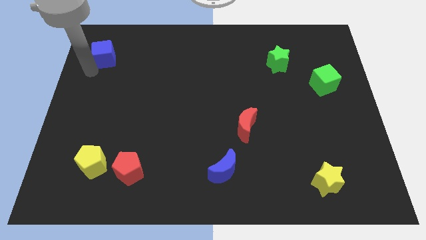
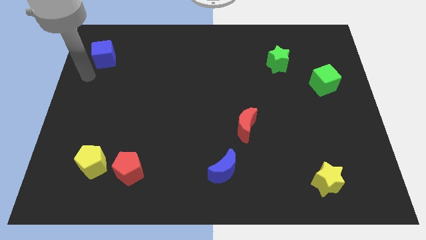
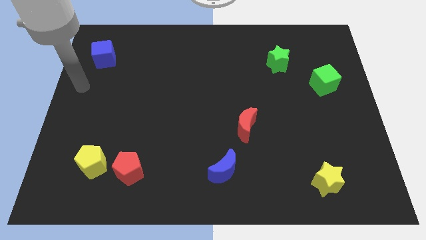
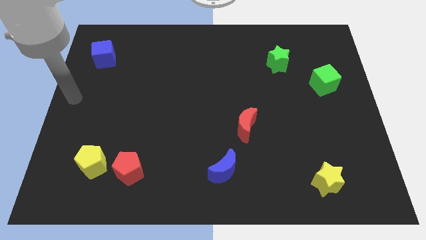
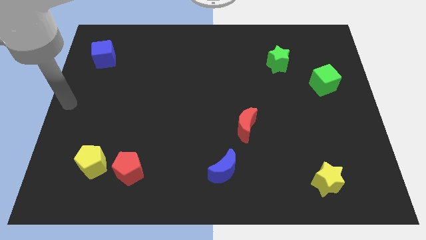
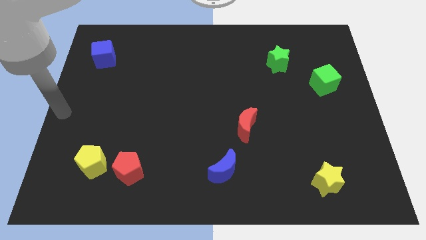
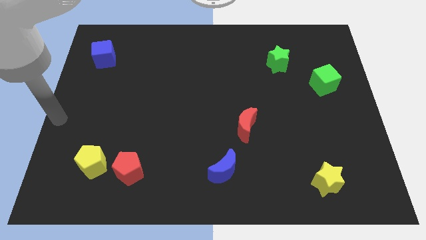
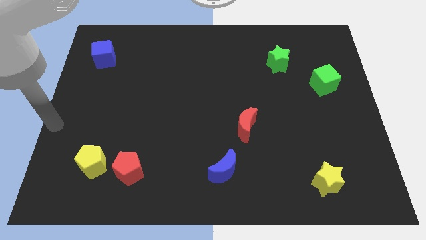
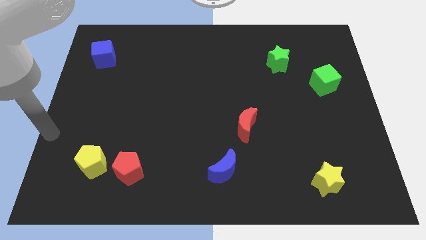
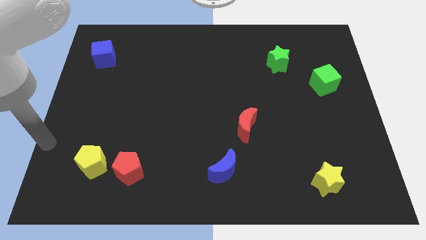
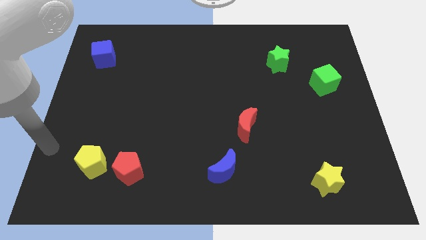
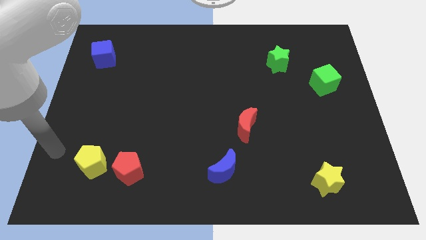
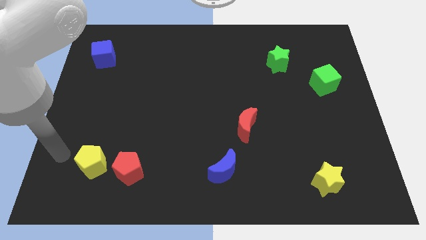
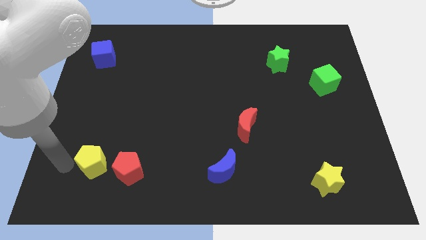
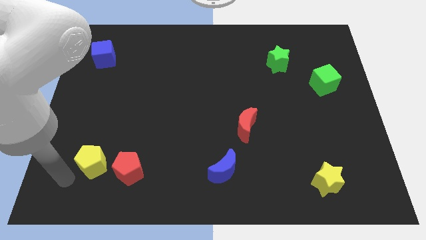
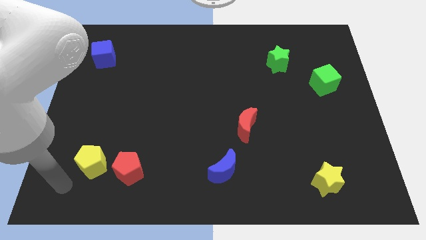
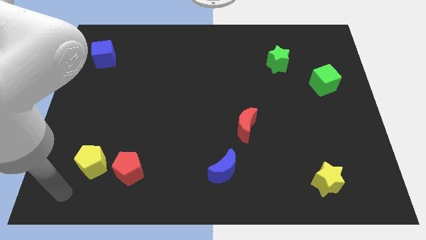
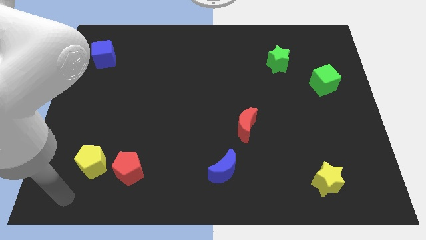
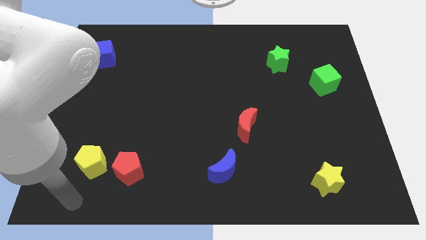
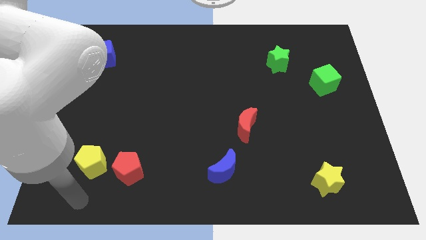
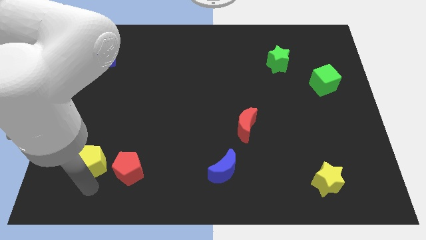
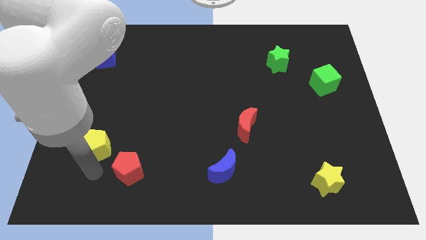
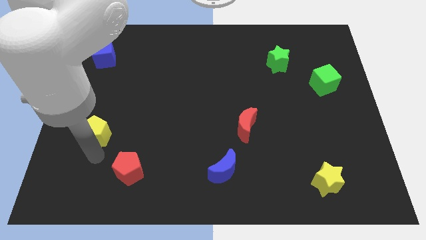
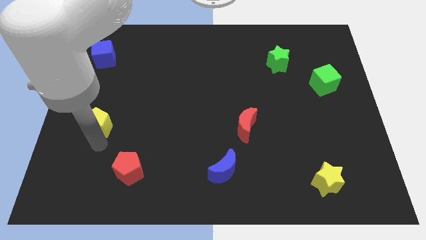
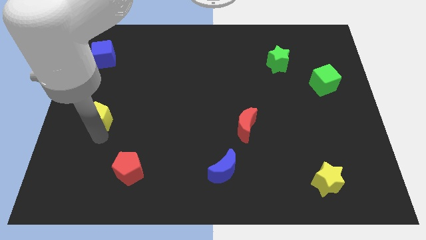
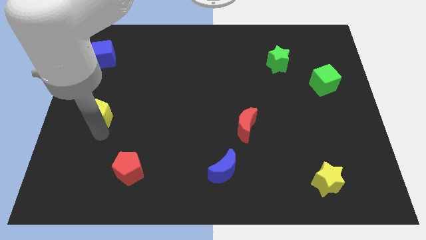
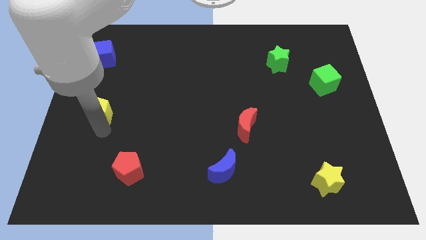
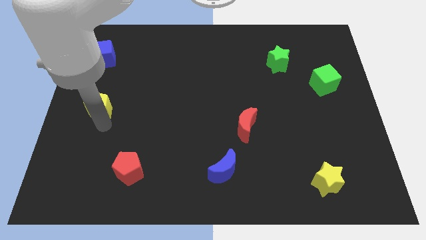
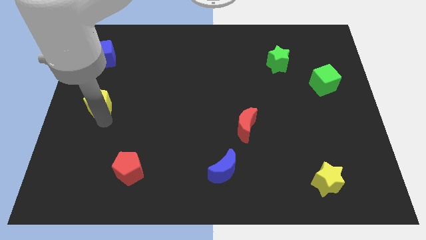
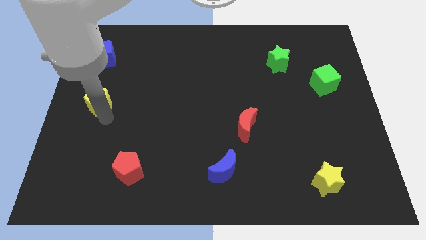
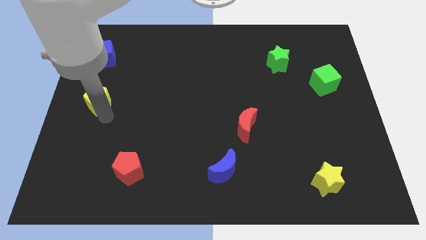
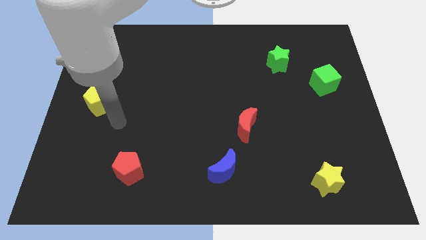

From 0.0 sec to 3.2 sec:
place the yellow pentagon to the center left side of the board

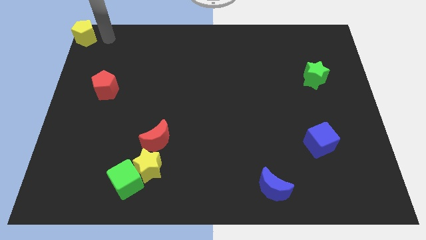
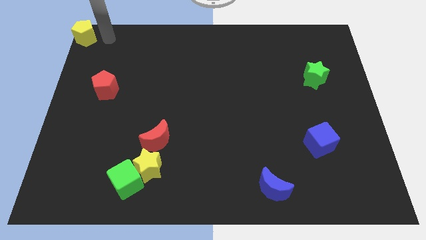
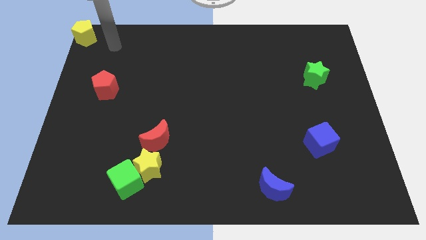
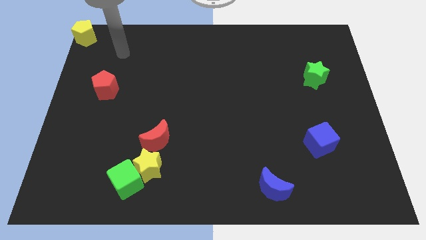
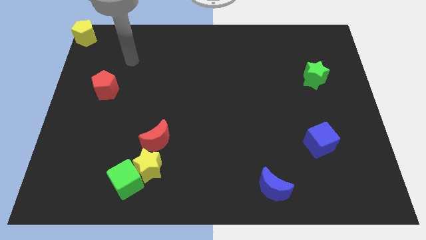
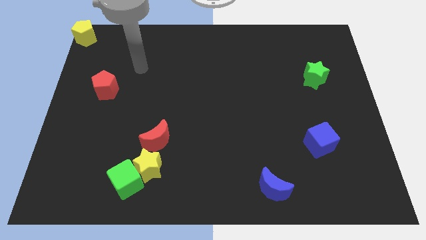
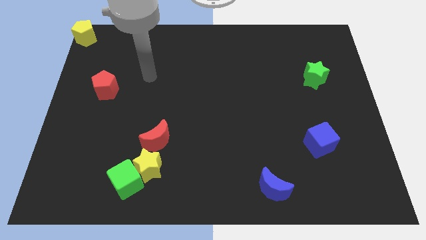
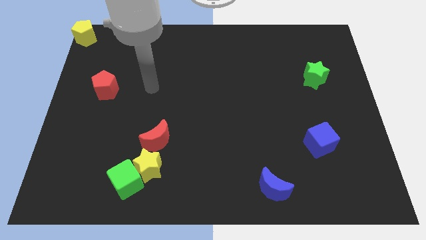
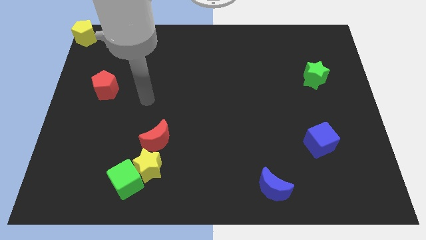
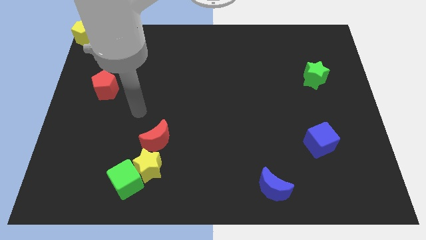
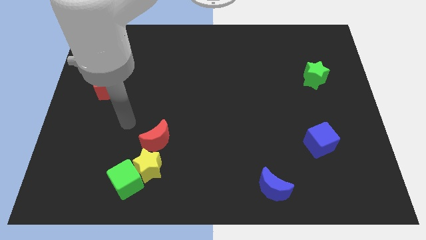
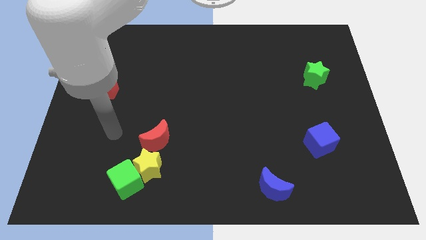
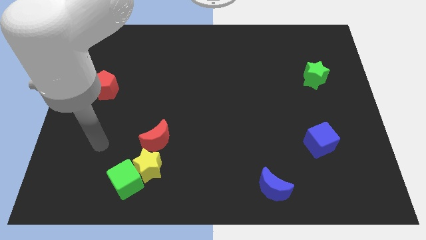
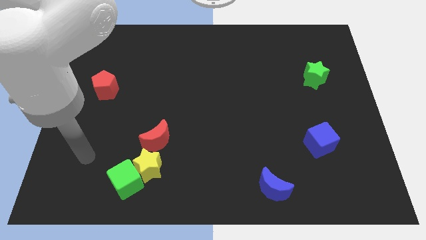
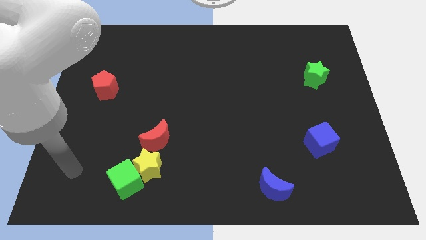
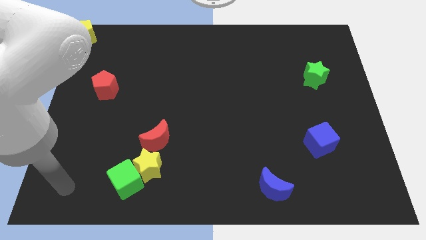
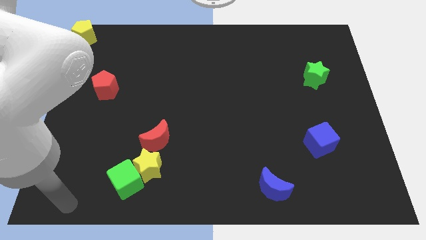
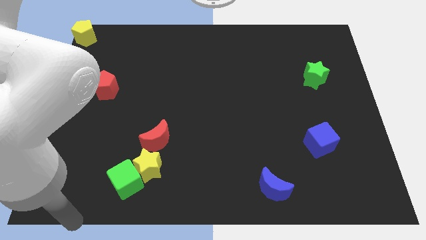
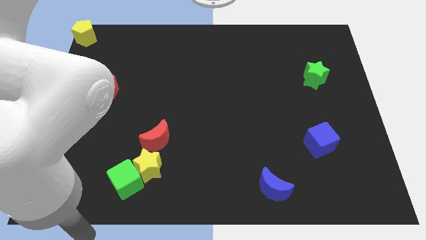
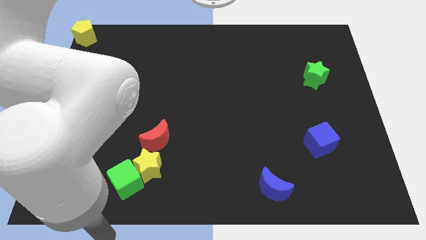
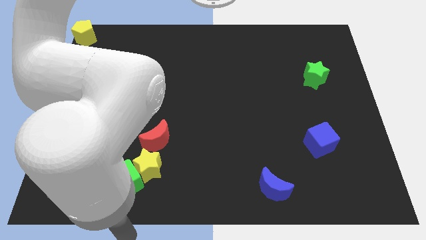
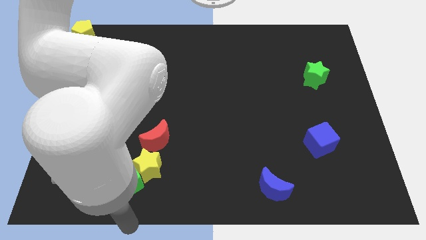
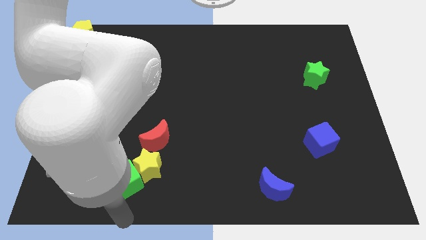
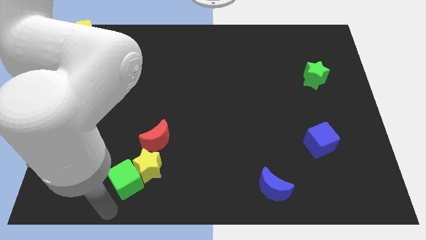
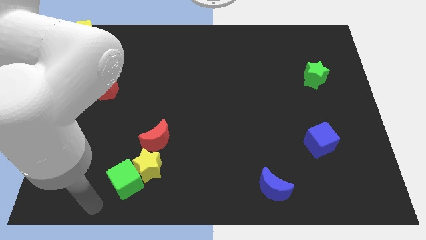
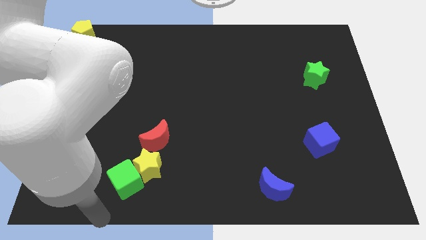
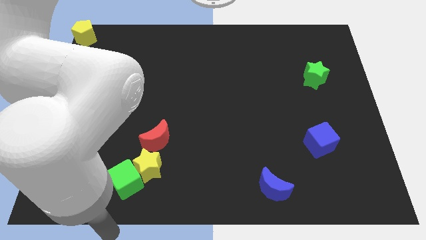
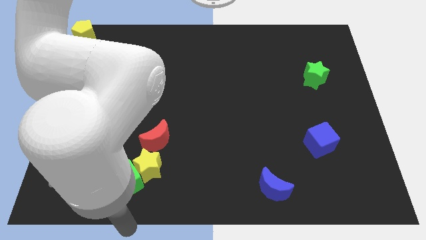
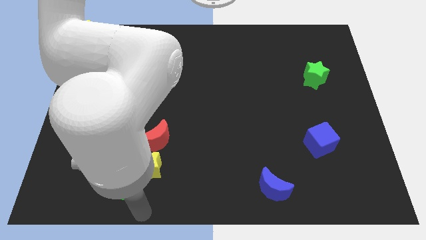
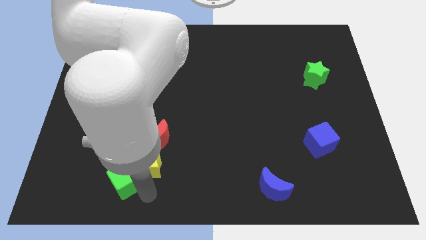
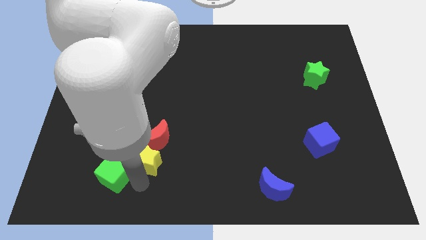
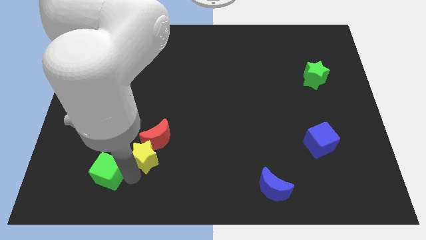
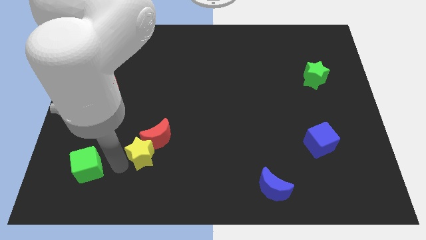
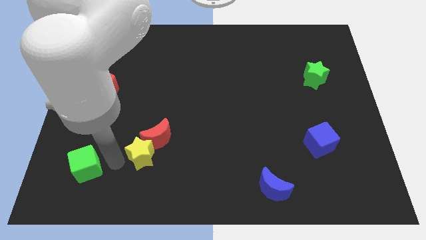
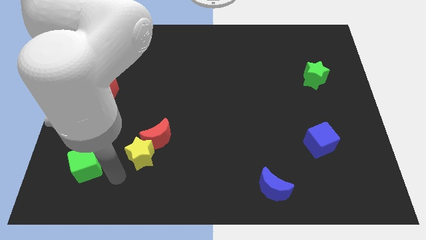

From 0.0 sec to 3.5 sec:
separate the green cube from the yellow star

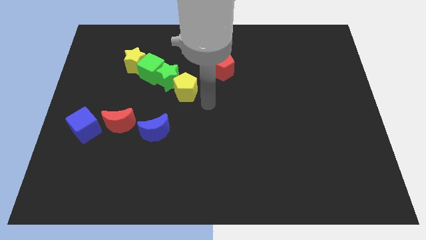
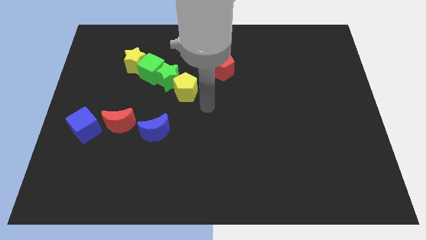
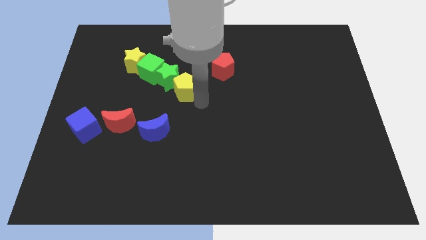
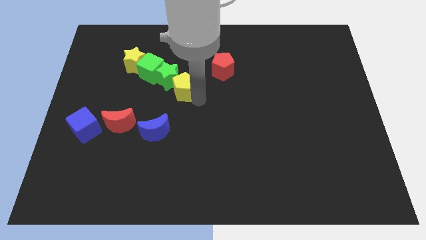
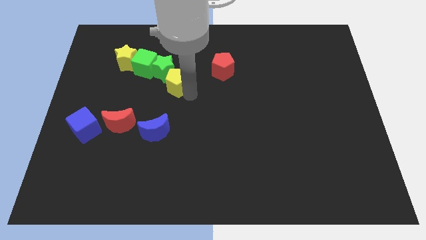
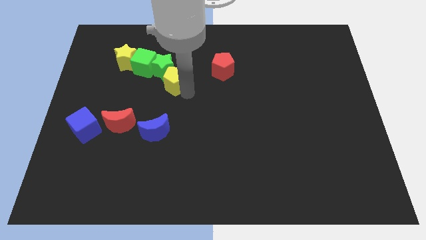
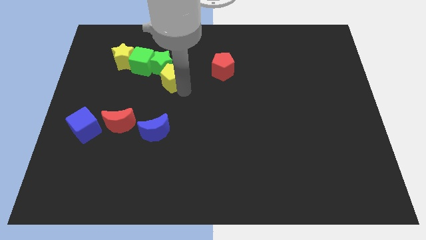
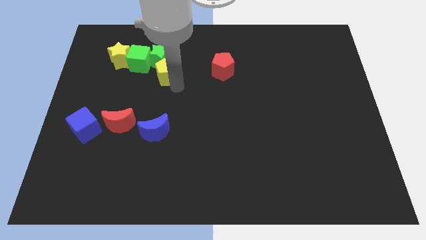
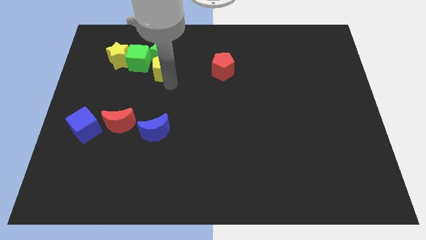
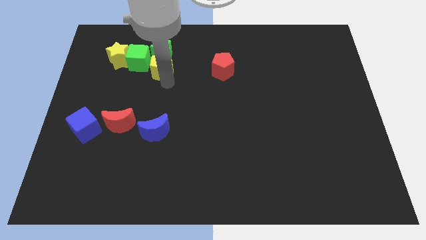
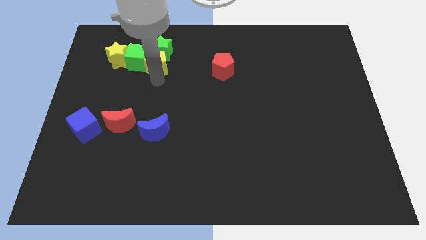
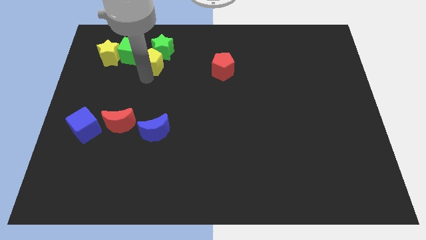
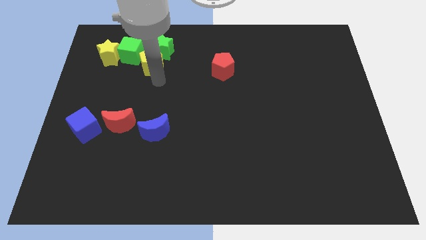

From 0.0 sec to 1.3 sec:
push the green and yellow blocks towards the top left corner of the board

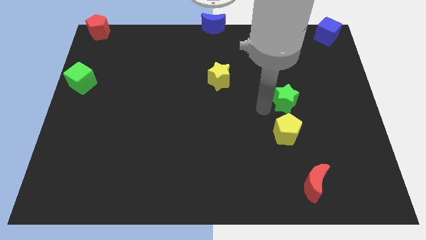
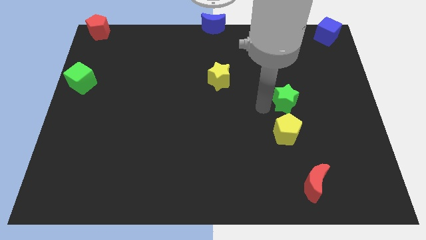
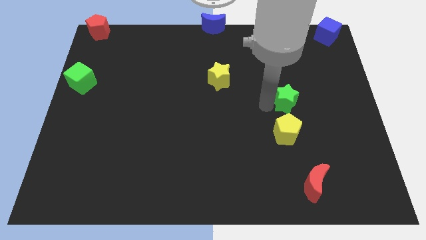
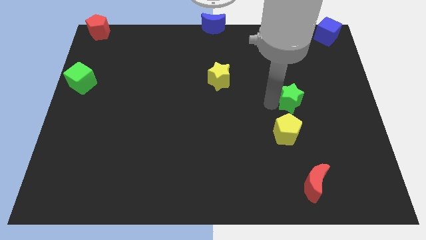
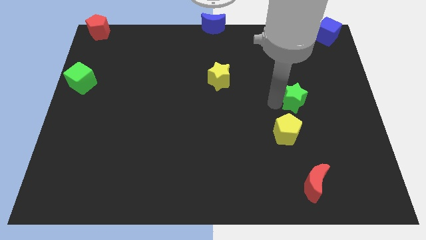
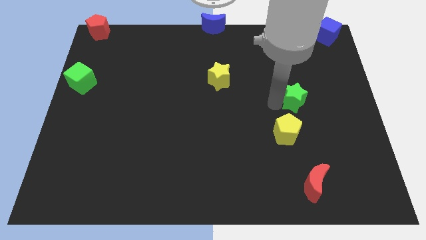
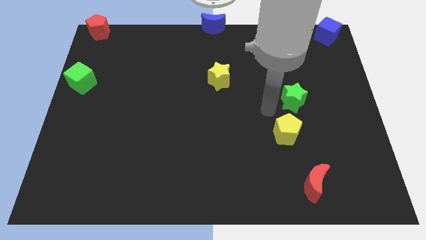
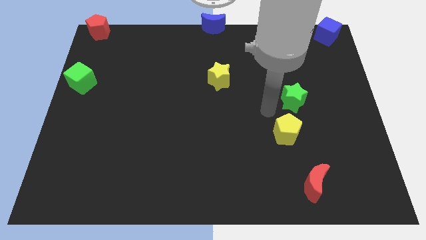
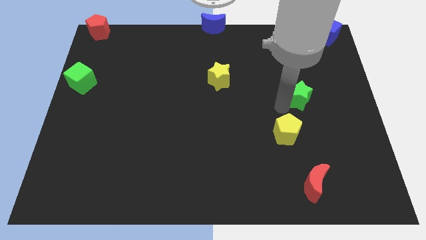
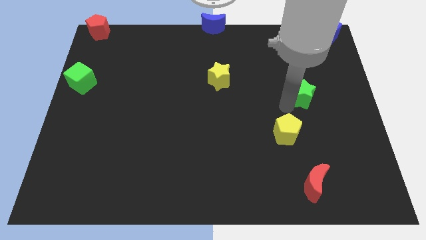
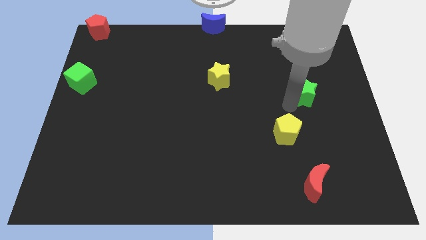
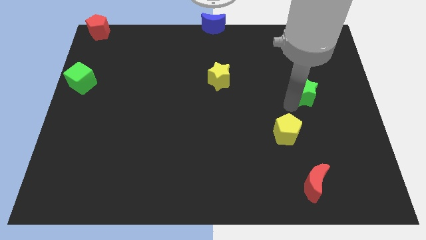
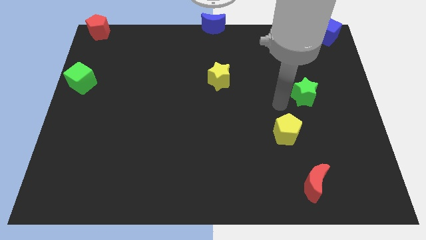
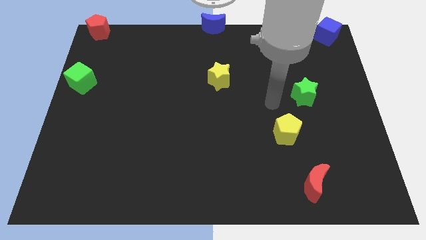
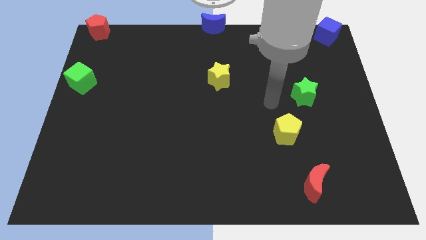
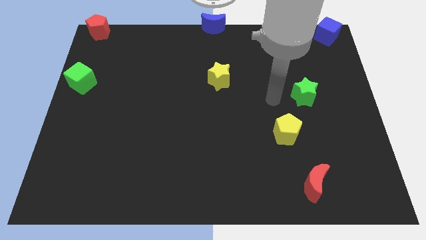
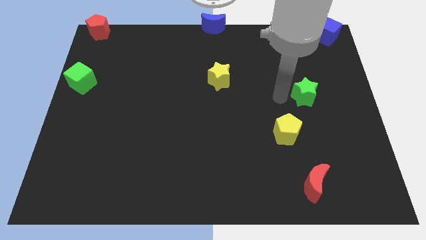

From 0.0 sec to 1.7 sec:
place the green star at the top right side of the yellow pentagon
